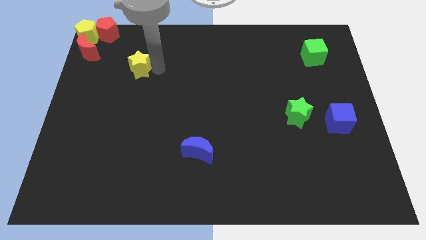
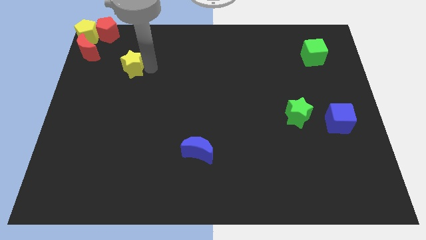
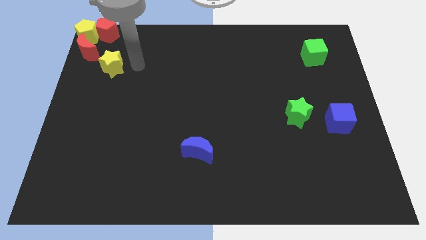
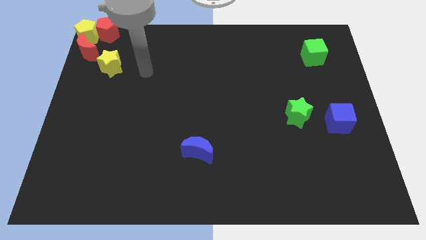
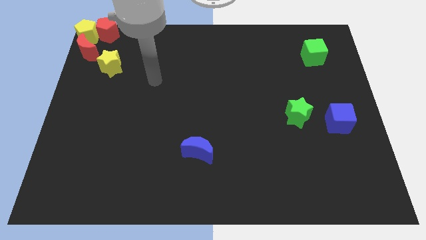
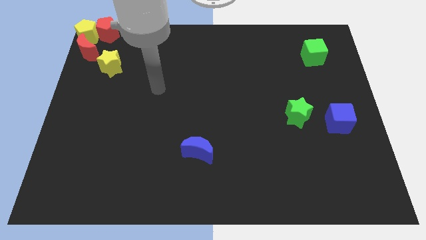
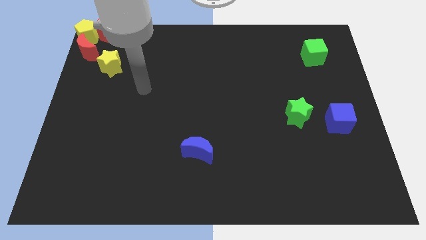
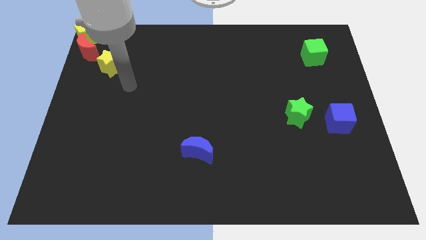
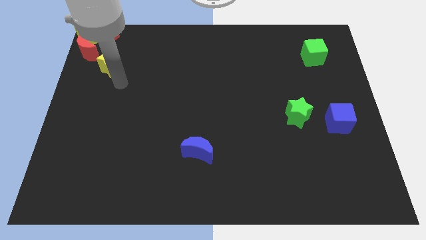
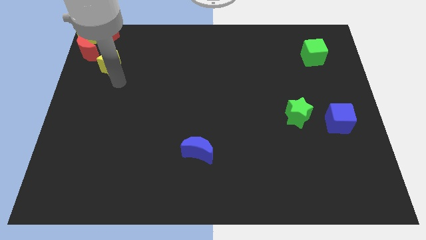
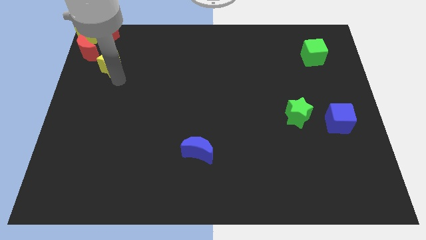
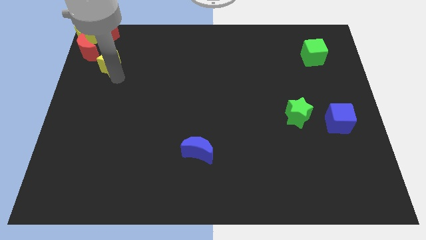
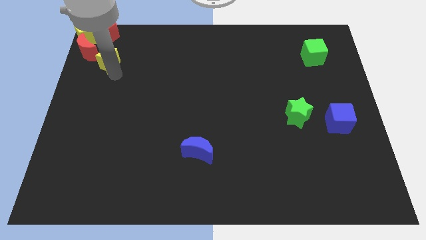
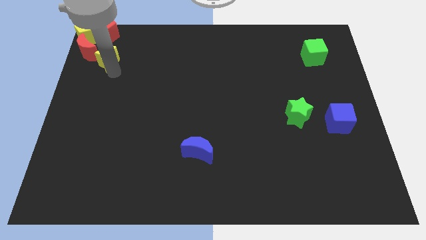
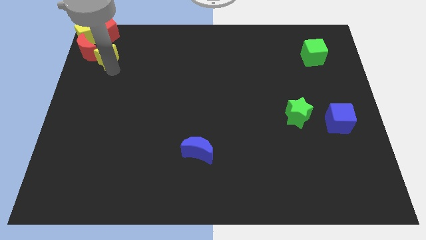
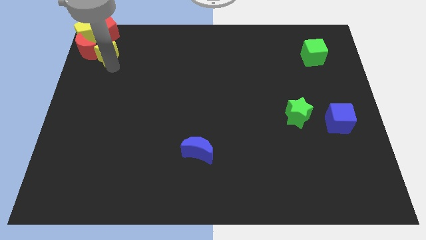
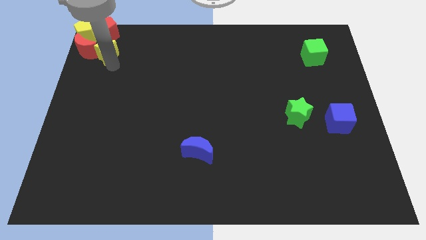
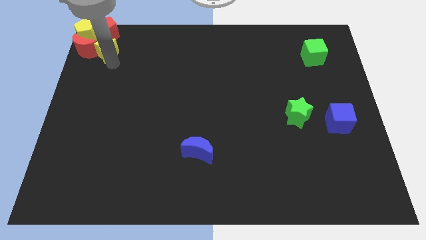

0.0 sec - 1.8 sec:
place the yellow star into the group of blocks

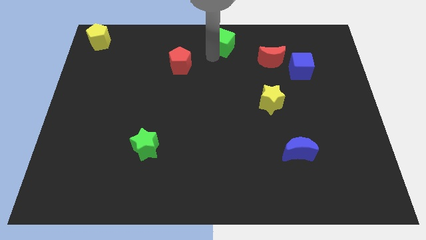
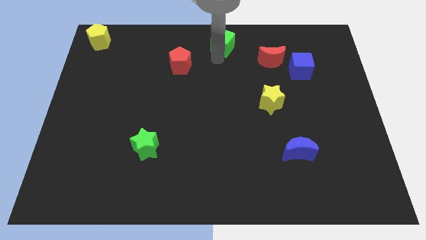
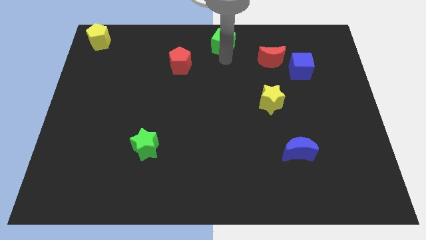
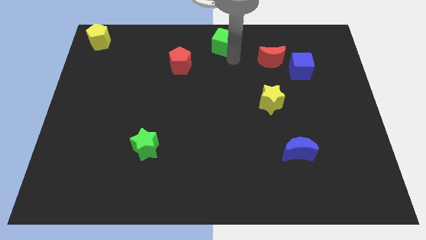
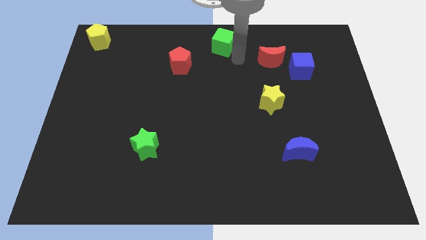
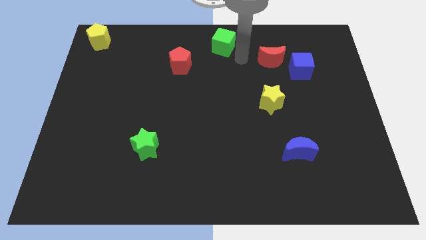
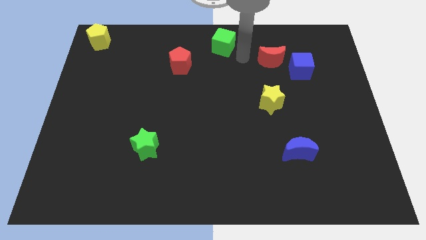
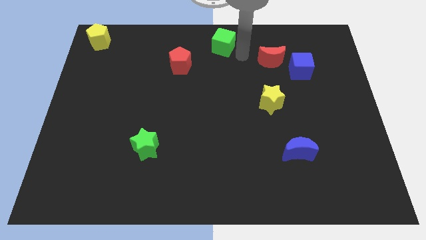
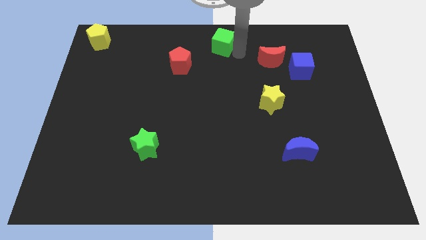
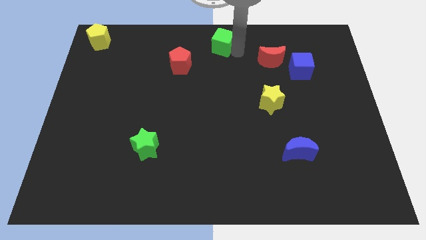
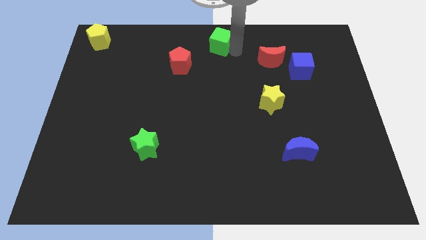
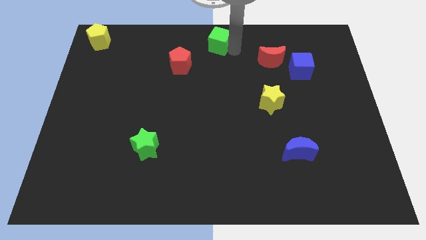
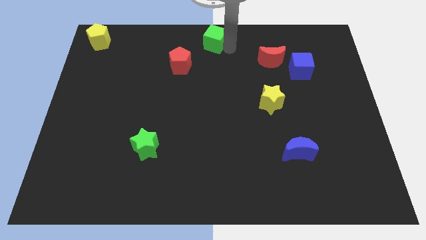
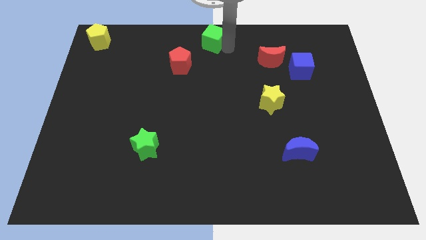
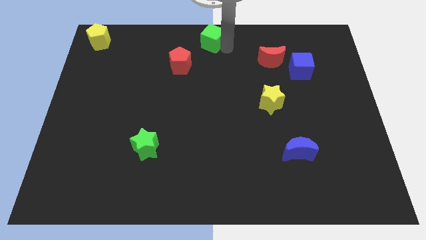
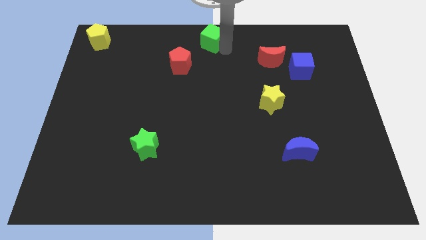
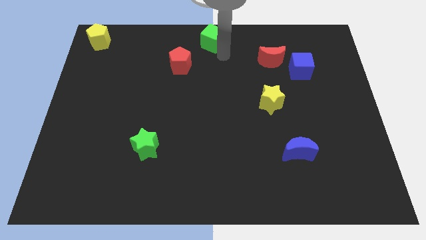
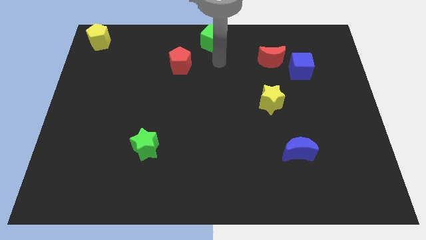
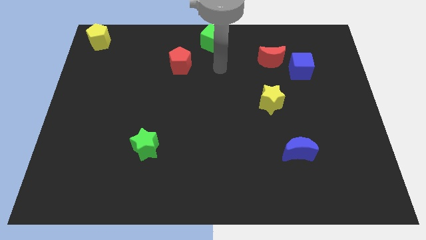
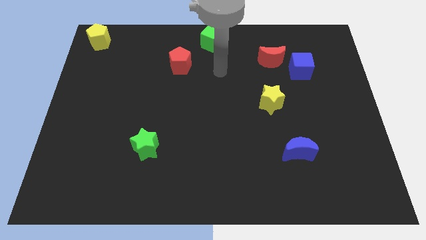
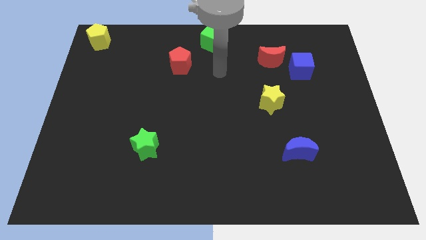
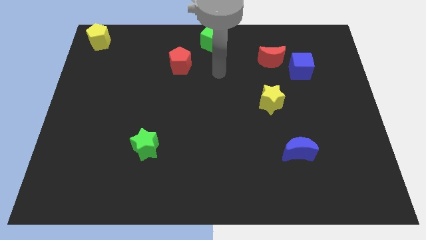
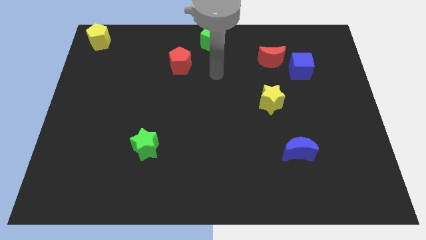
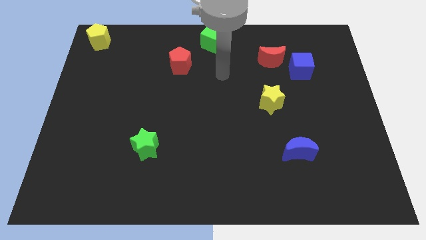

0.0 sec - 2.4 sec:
place the green cube at top center of the board

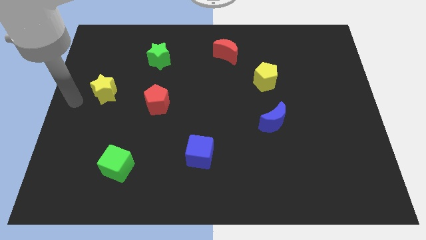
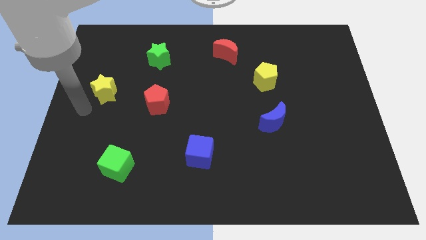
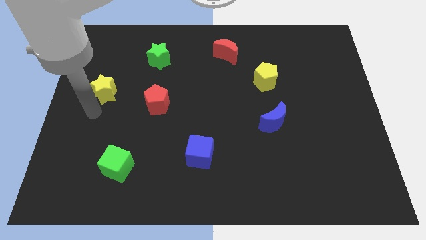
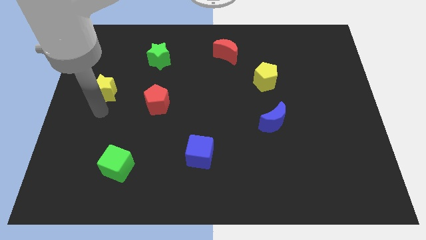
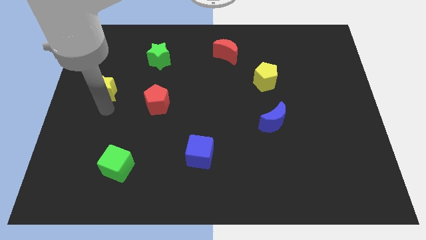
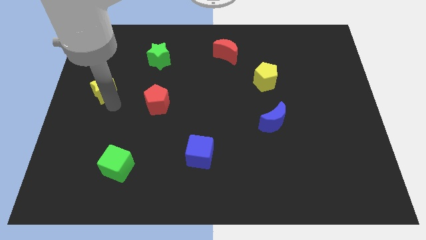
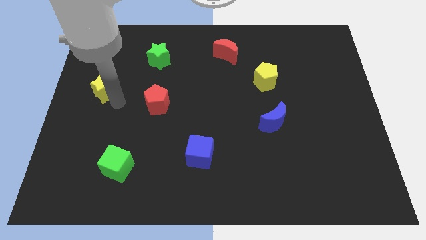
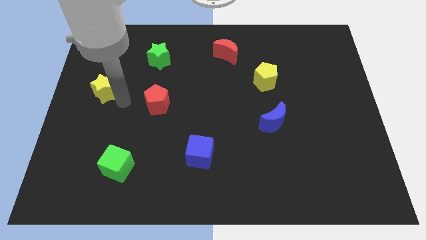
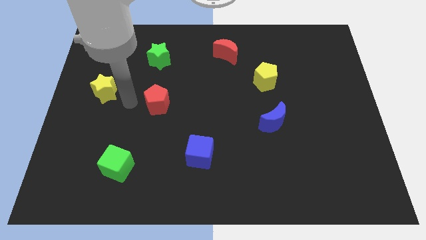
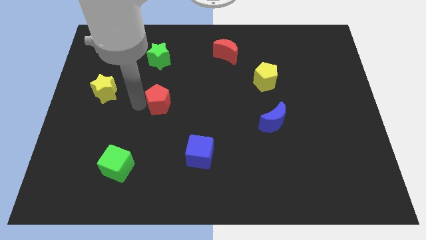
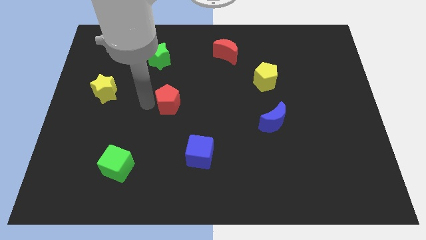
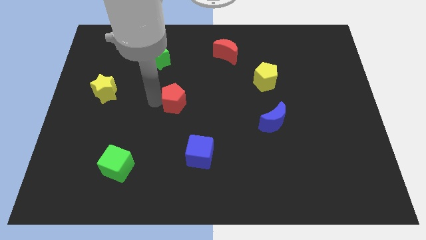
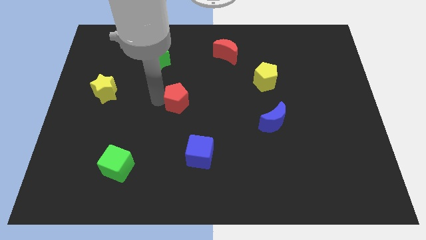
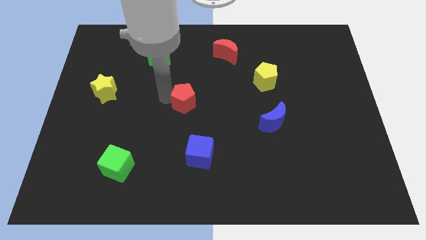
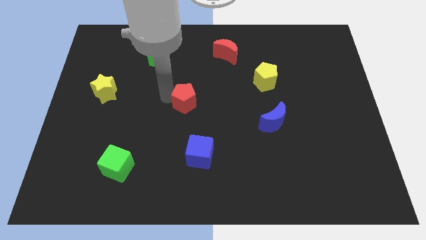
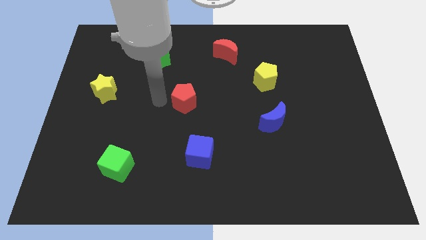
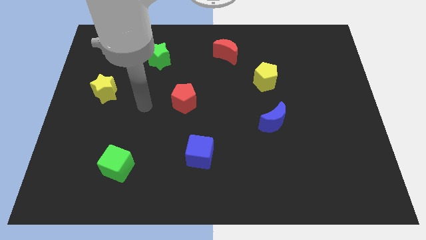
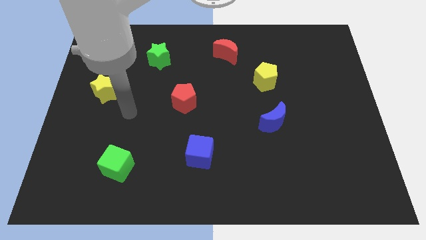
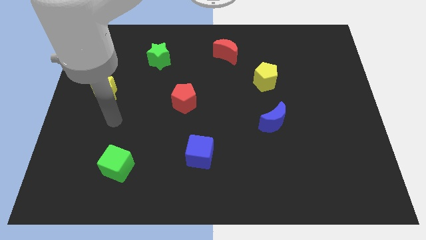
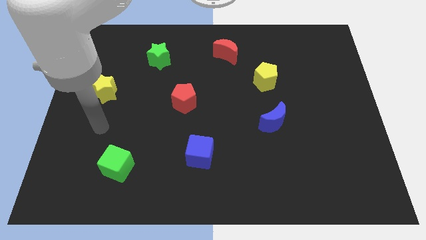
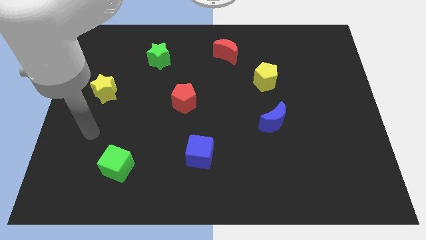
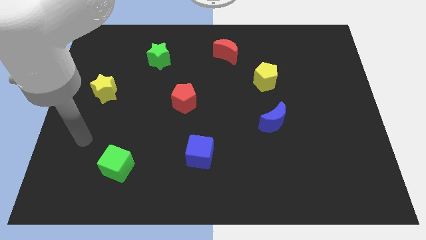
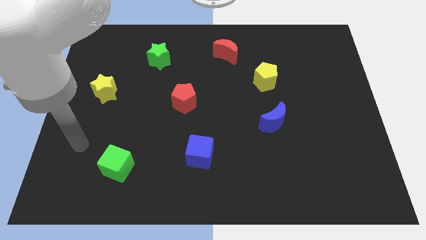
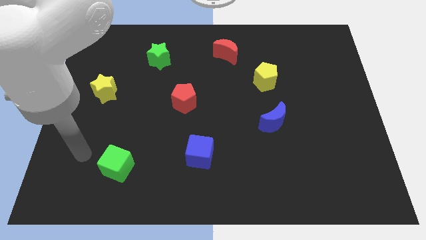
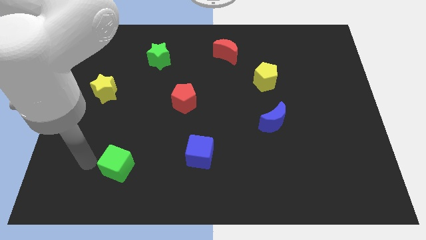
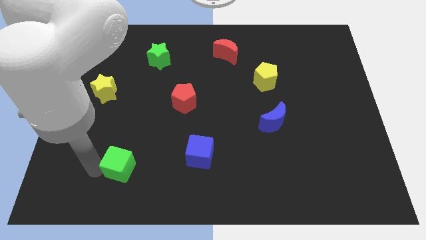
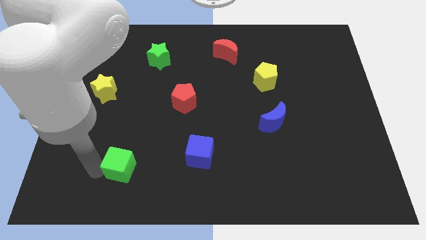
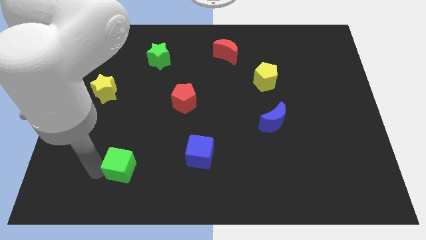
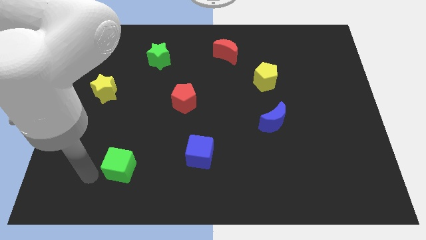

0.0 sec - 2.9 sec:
move red pentagon to the center of the board

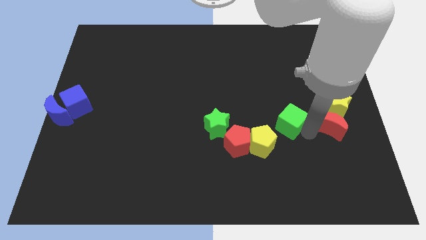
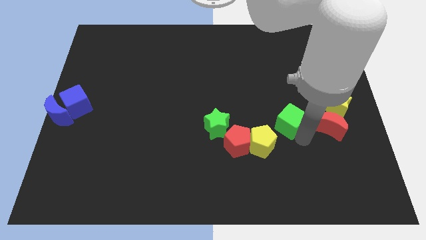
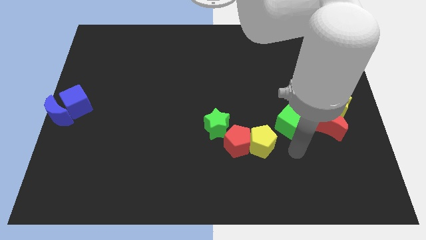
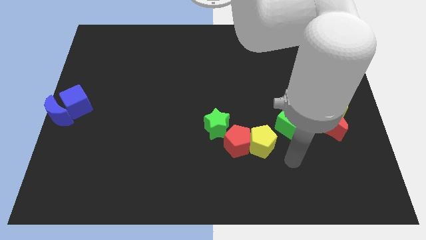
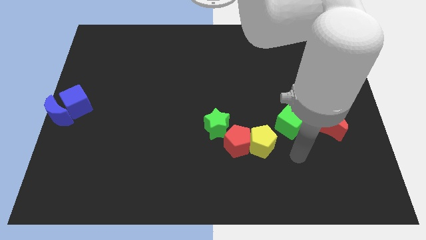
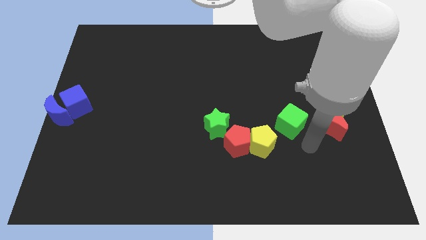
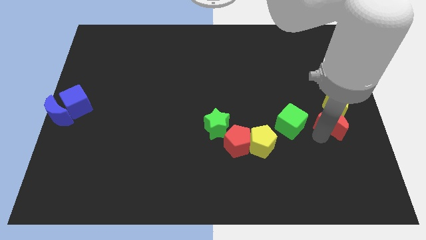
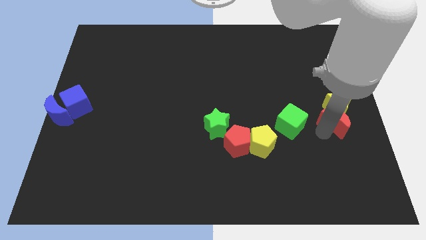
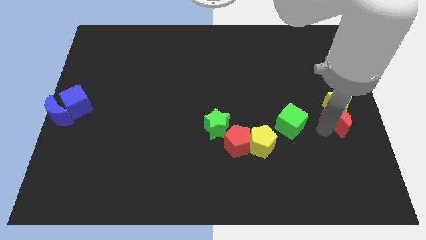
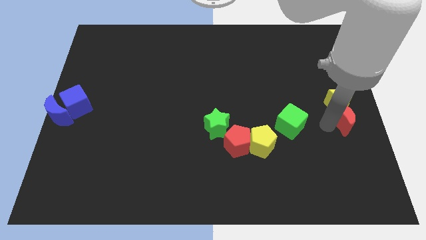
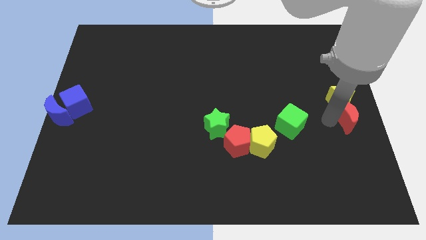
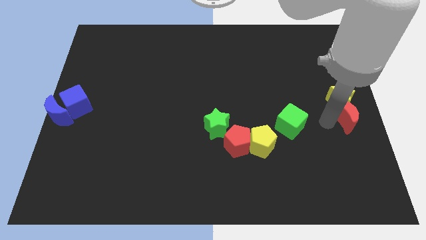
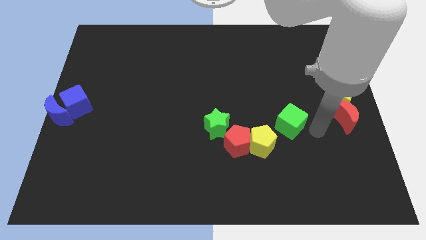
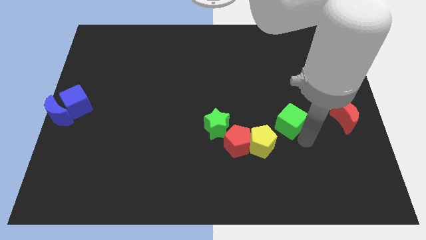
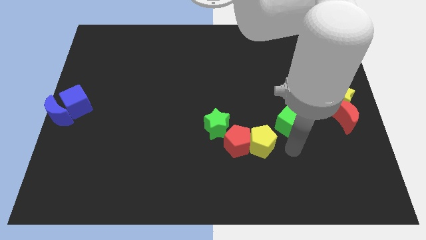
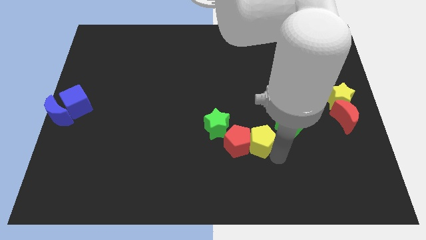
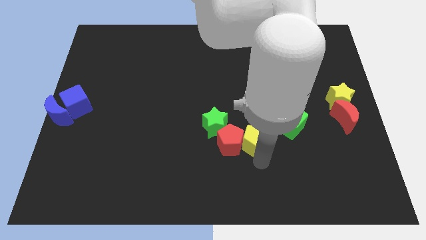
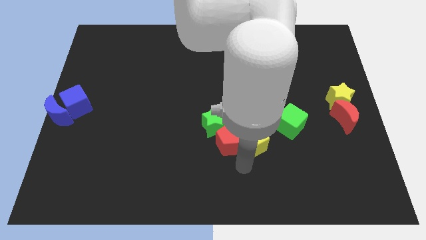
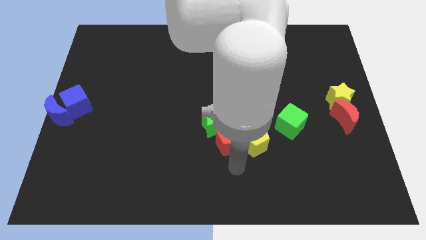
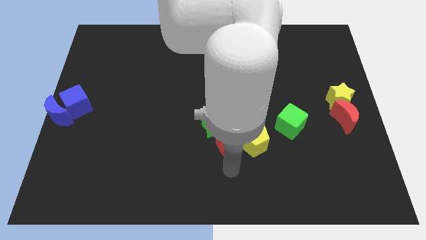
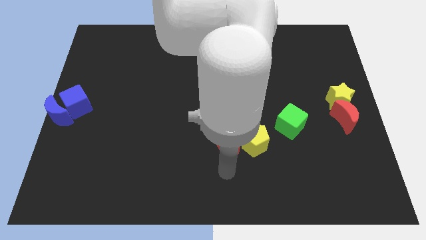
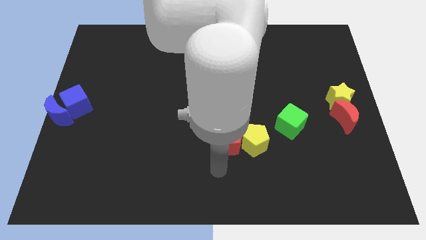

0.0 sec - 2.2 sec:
push the red moon and yellow star to the right side of the board
